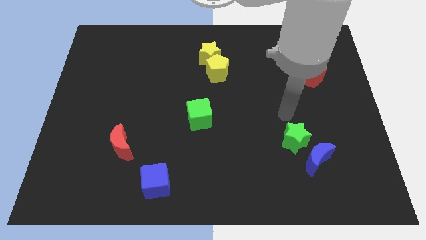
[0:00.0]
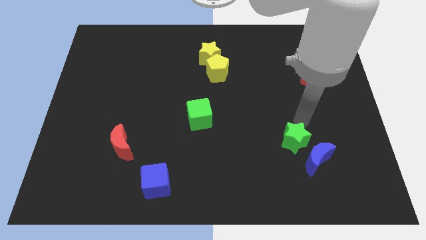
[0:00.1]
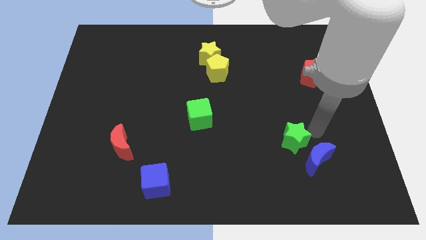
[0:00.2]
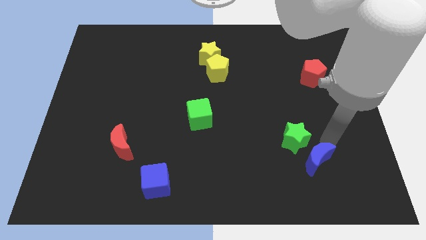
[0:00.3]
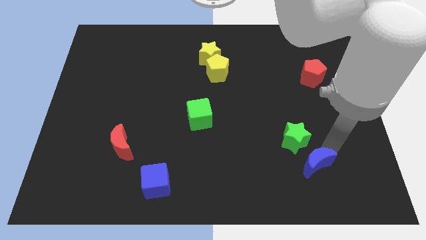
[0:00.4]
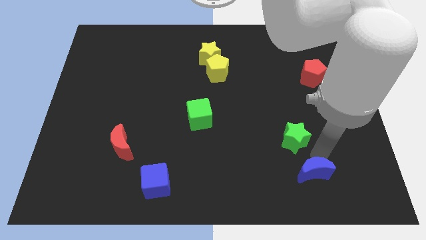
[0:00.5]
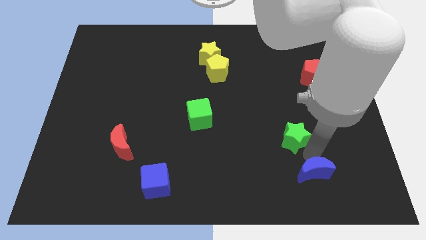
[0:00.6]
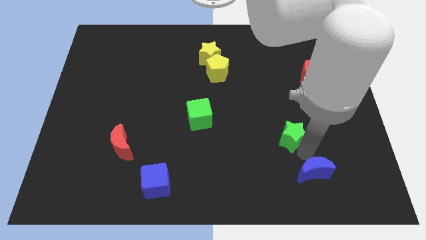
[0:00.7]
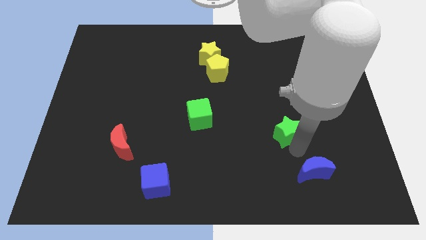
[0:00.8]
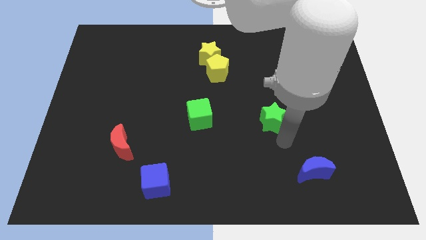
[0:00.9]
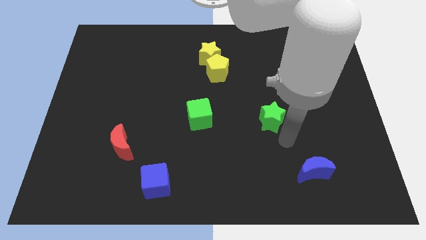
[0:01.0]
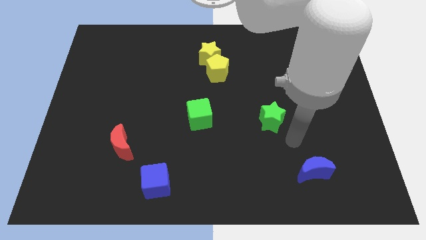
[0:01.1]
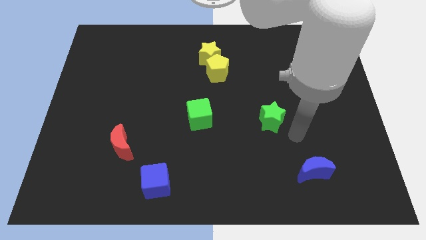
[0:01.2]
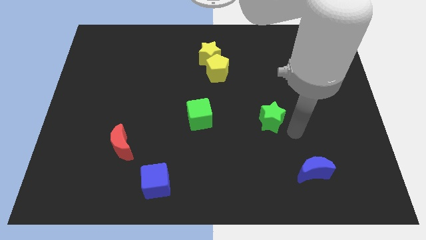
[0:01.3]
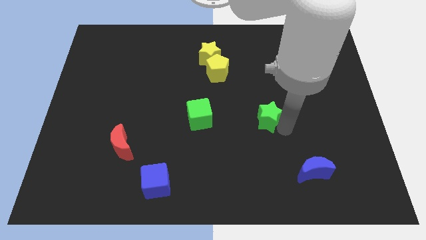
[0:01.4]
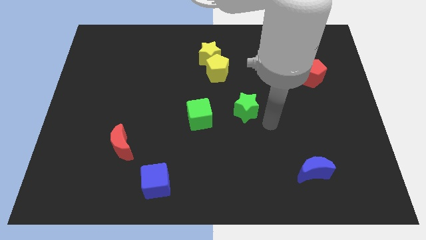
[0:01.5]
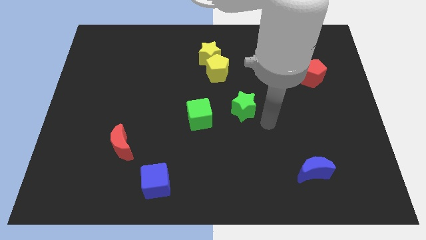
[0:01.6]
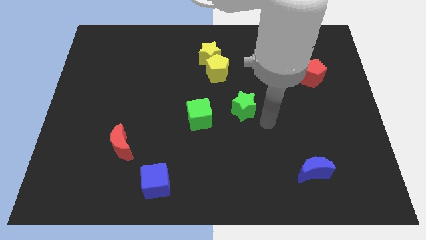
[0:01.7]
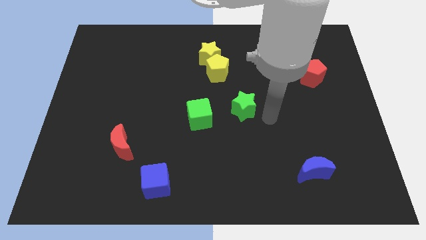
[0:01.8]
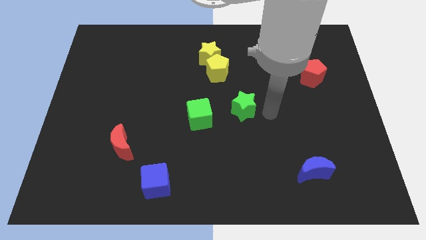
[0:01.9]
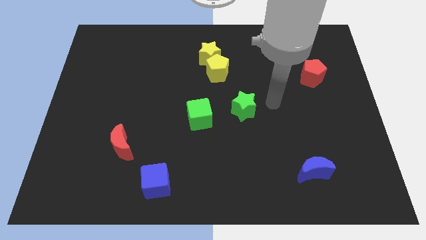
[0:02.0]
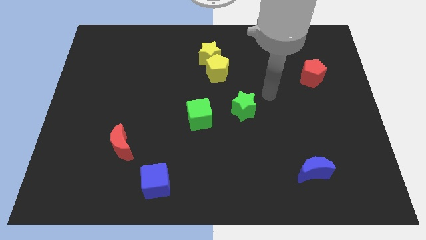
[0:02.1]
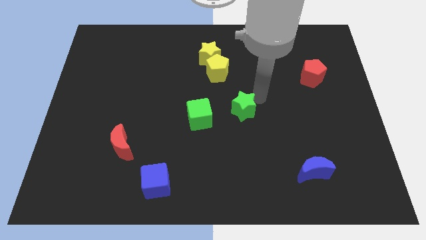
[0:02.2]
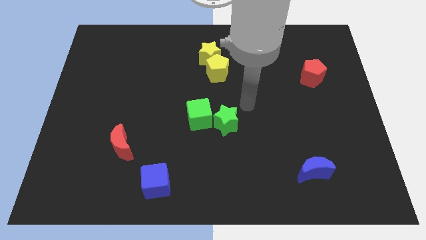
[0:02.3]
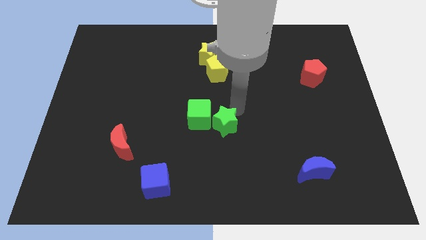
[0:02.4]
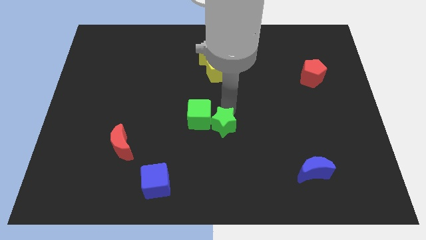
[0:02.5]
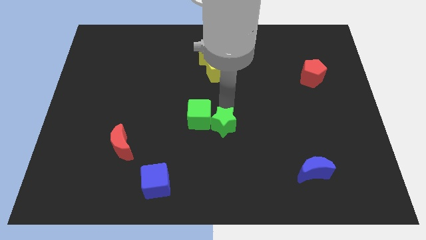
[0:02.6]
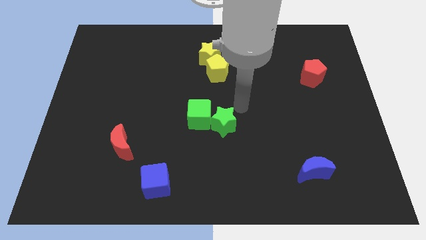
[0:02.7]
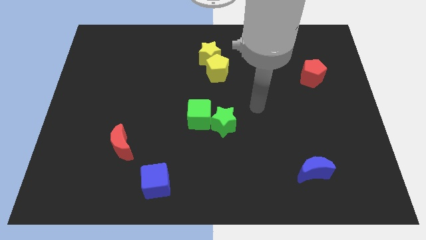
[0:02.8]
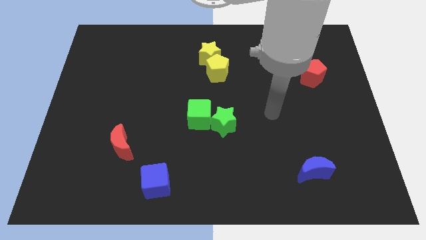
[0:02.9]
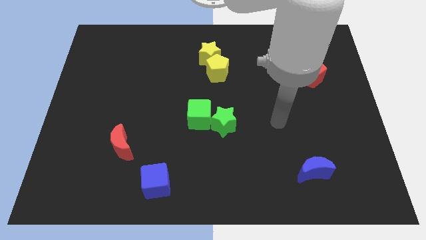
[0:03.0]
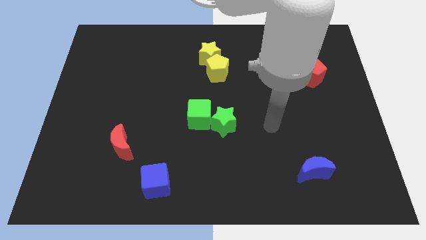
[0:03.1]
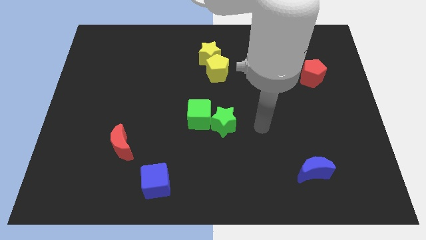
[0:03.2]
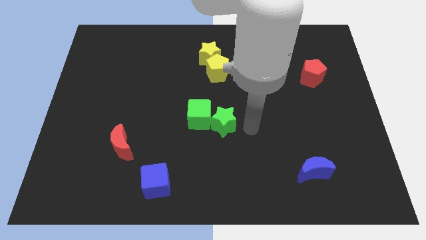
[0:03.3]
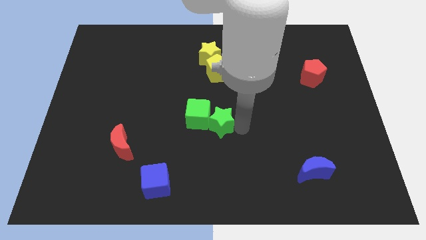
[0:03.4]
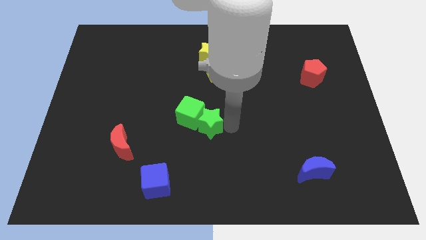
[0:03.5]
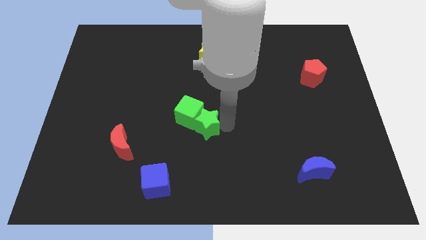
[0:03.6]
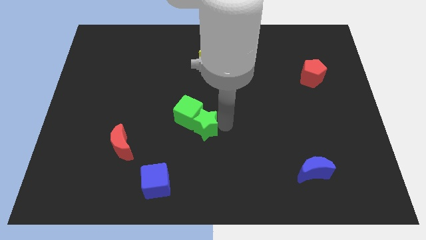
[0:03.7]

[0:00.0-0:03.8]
push the green star into the right side of the green cube

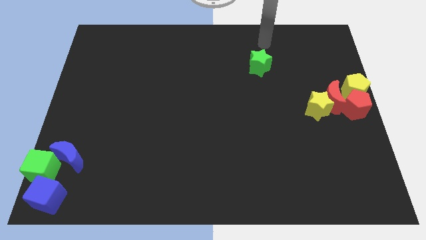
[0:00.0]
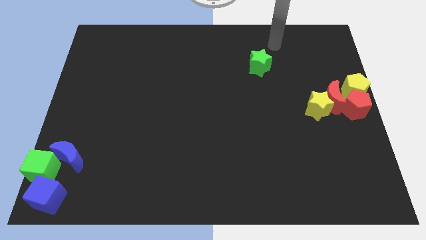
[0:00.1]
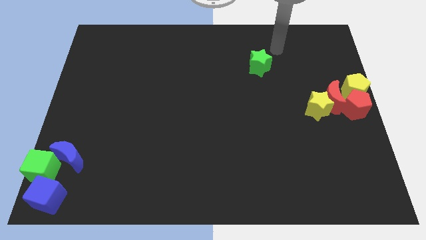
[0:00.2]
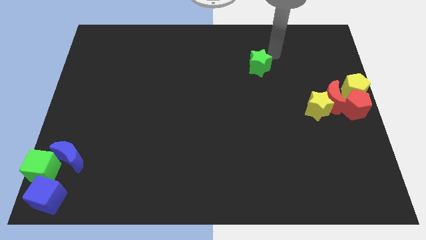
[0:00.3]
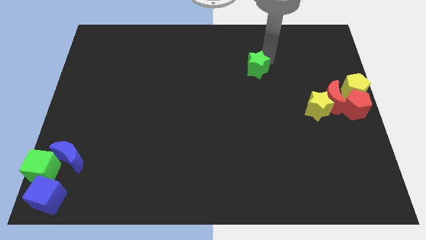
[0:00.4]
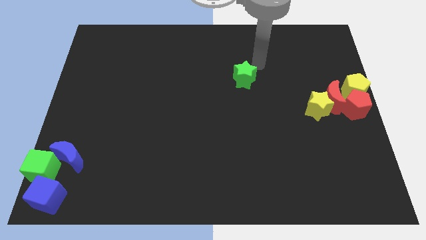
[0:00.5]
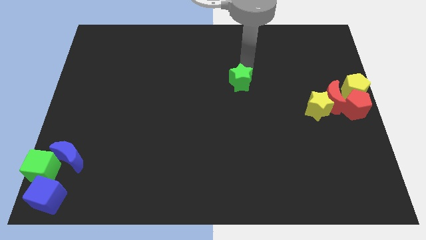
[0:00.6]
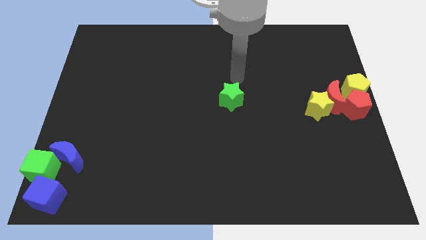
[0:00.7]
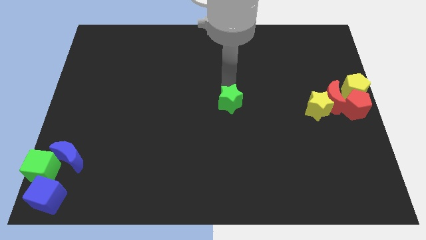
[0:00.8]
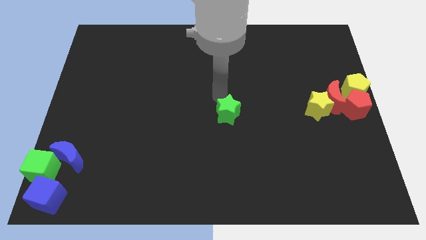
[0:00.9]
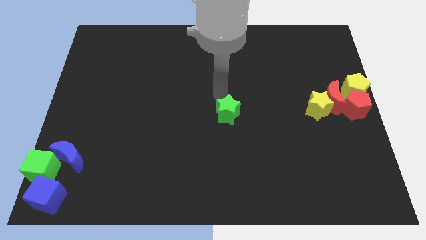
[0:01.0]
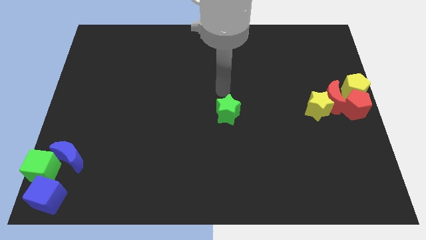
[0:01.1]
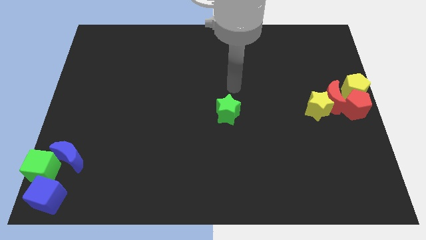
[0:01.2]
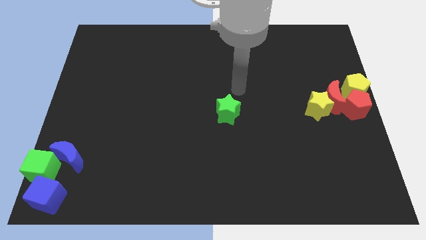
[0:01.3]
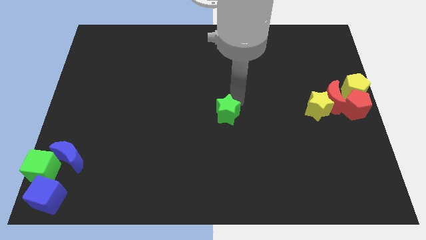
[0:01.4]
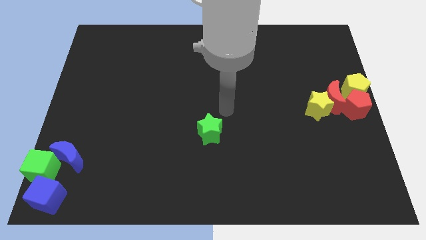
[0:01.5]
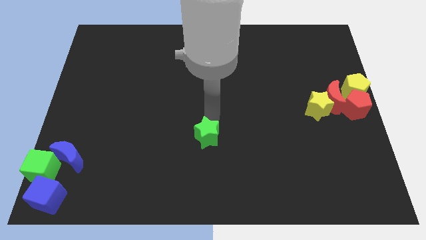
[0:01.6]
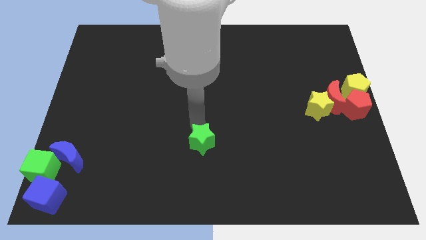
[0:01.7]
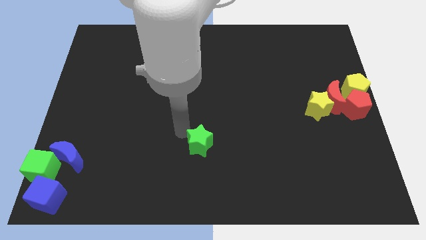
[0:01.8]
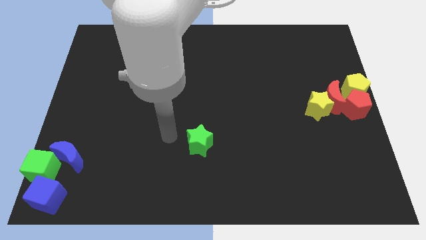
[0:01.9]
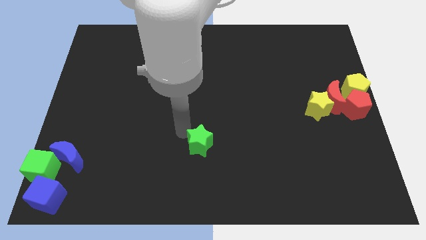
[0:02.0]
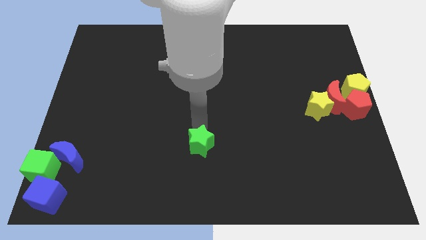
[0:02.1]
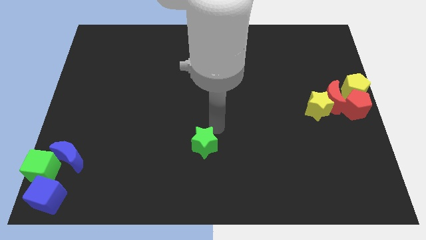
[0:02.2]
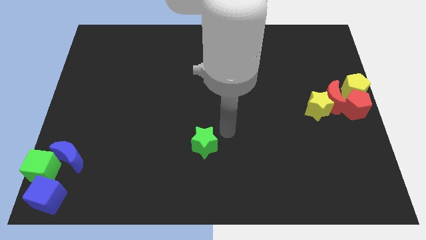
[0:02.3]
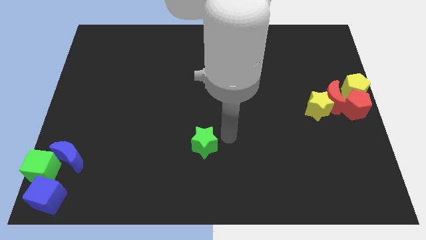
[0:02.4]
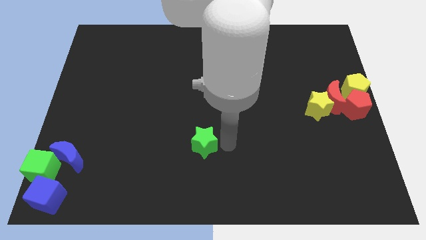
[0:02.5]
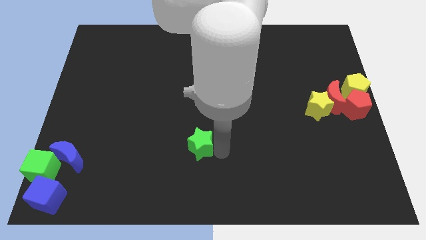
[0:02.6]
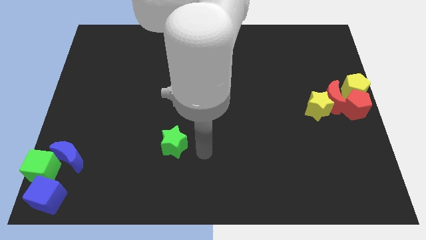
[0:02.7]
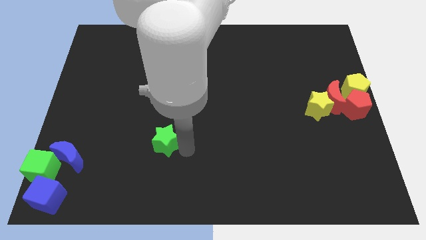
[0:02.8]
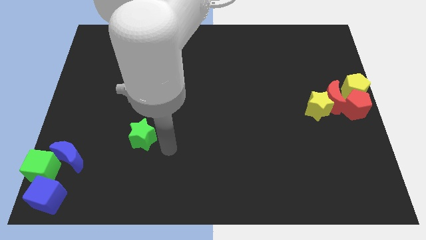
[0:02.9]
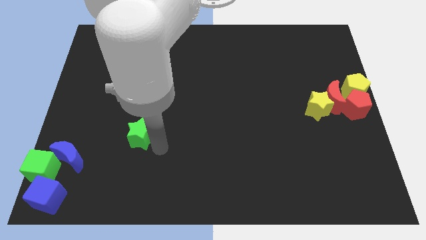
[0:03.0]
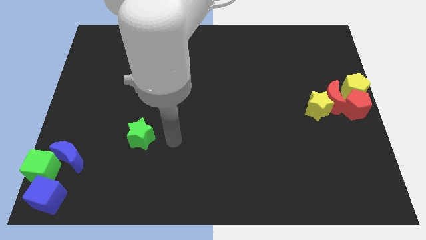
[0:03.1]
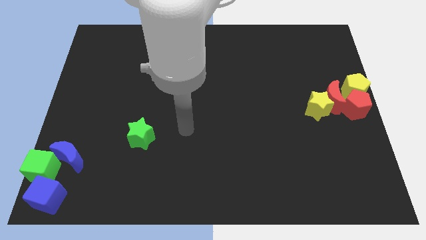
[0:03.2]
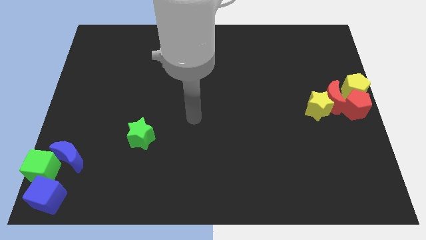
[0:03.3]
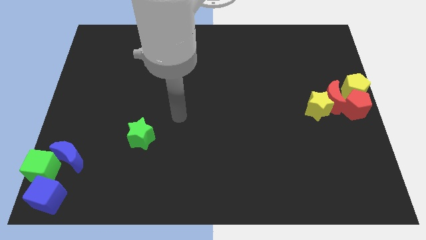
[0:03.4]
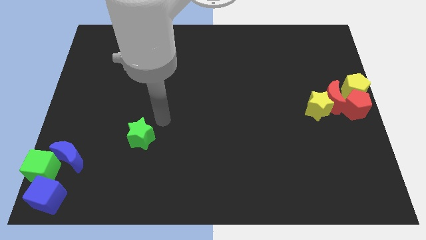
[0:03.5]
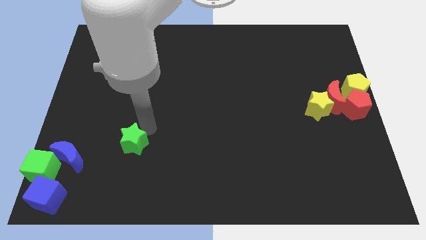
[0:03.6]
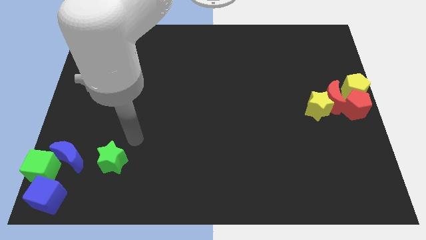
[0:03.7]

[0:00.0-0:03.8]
place the green star to the right of the blue crescent

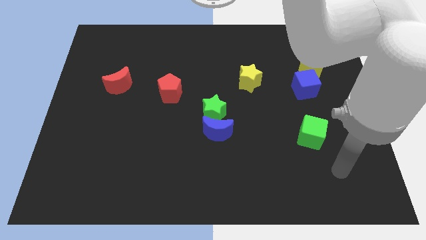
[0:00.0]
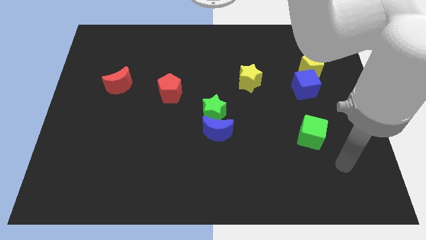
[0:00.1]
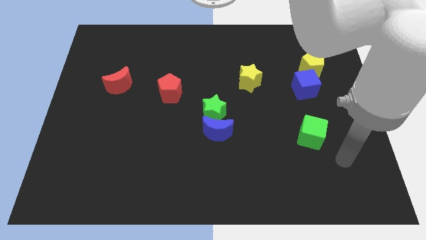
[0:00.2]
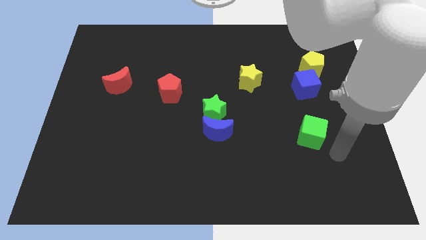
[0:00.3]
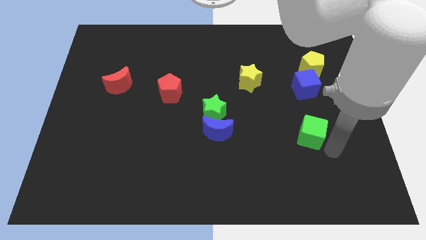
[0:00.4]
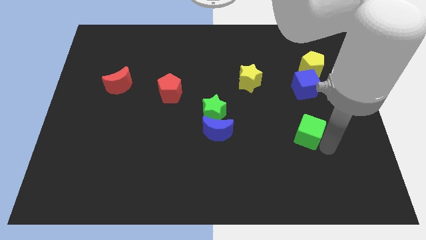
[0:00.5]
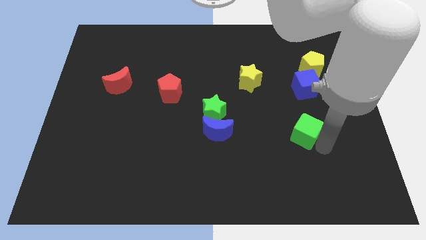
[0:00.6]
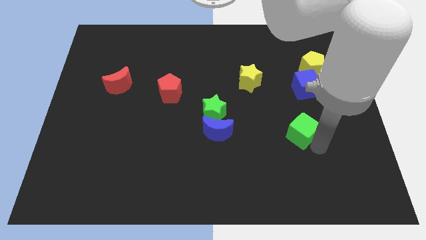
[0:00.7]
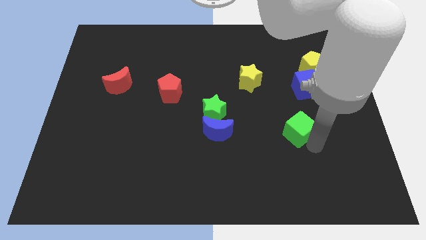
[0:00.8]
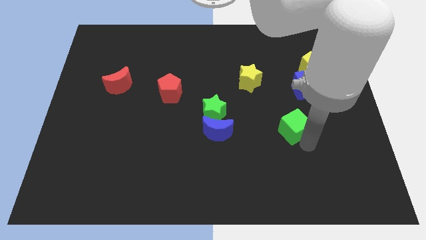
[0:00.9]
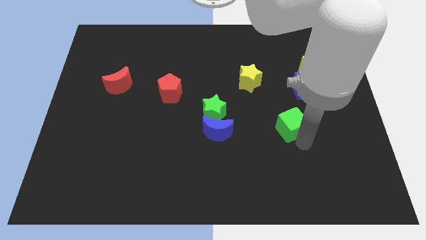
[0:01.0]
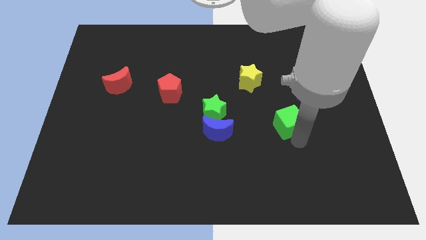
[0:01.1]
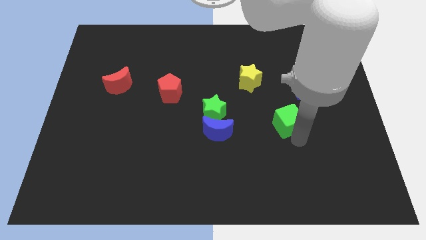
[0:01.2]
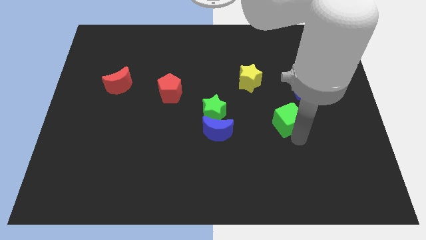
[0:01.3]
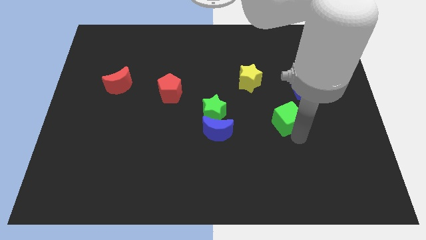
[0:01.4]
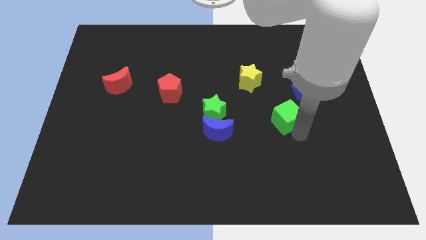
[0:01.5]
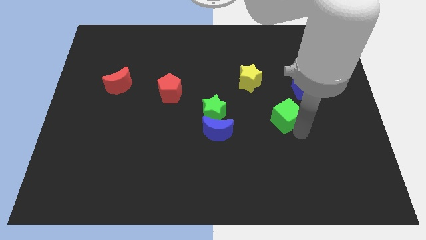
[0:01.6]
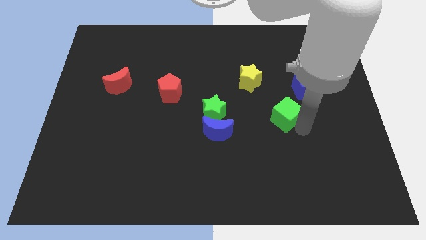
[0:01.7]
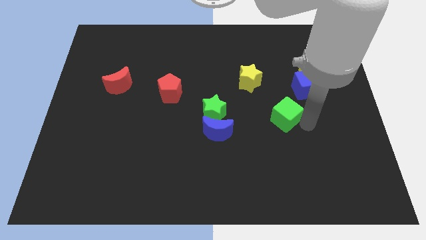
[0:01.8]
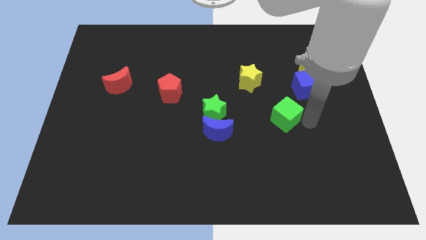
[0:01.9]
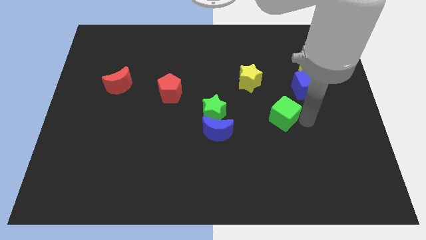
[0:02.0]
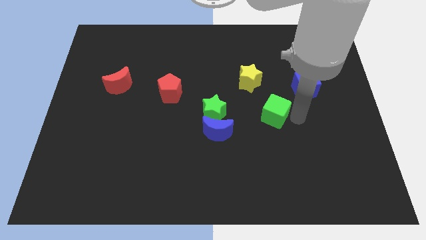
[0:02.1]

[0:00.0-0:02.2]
place the green cube to the center of the board
